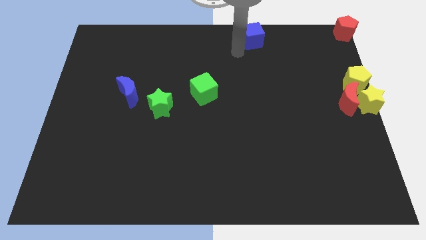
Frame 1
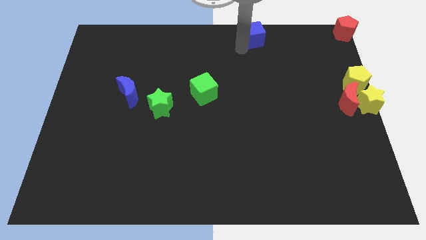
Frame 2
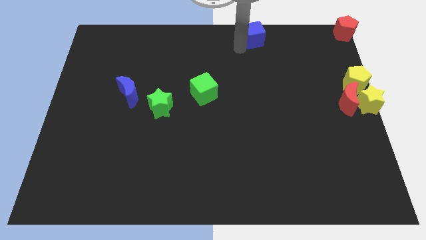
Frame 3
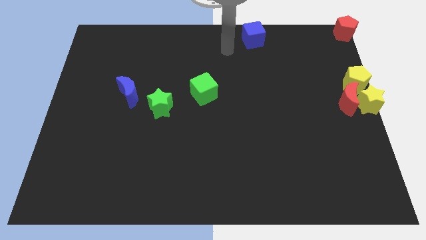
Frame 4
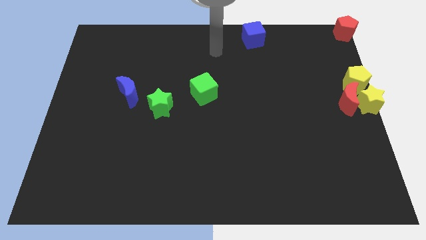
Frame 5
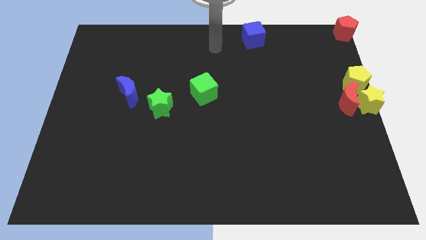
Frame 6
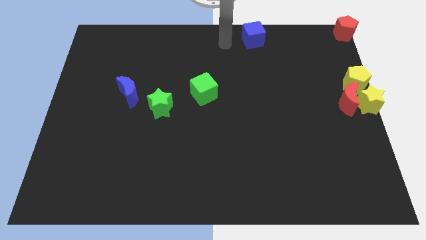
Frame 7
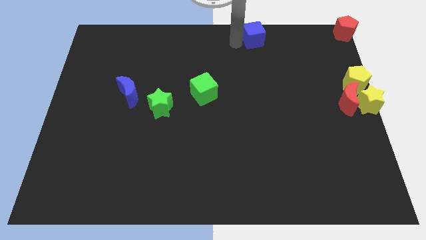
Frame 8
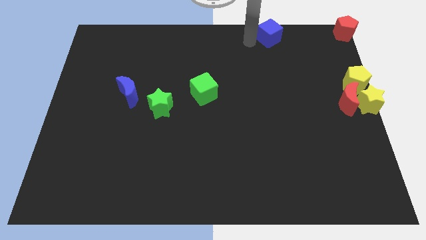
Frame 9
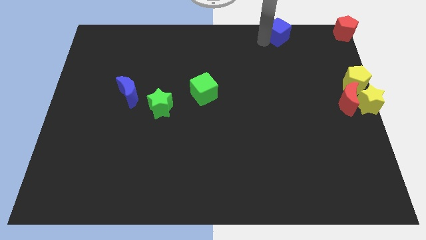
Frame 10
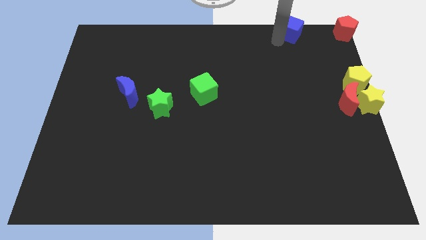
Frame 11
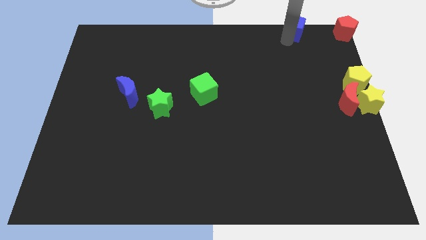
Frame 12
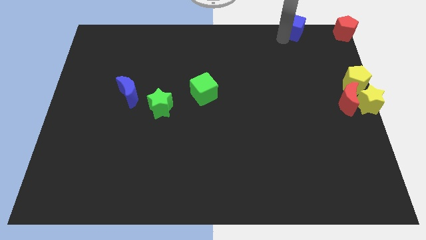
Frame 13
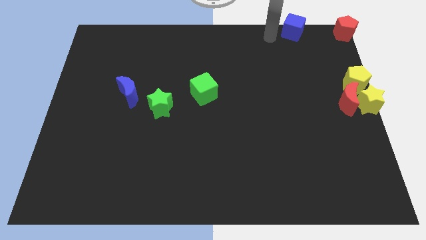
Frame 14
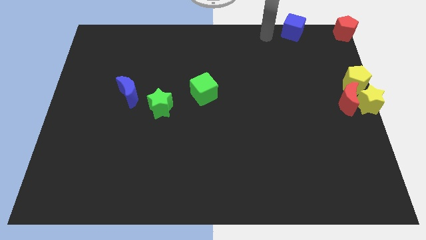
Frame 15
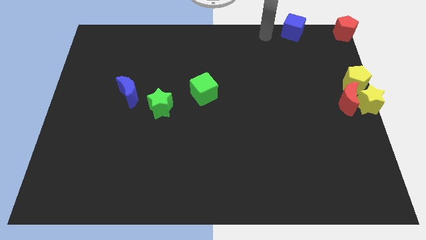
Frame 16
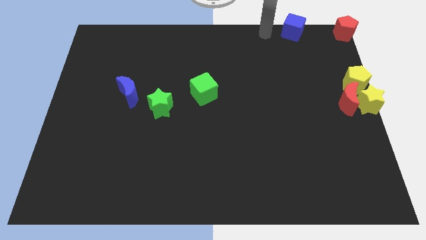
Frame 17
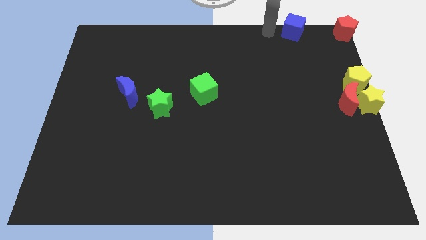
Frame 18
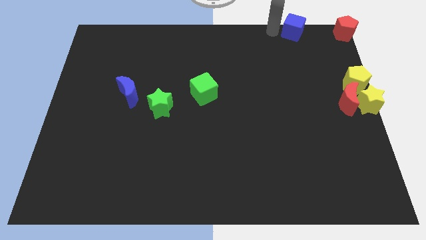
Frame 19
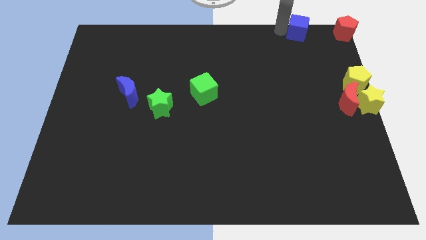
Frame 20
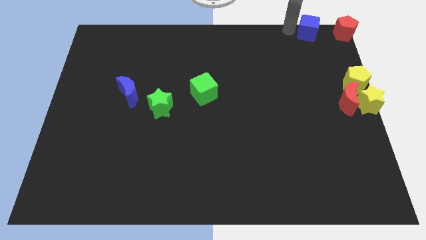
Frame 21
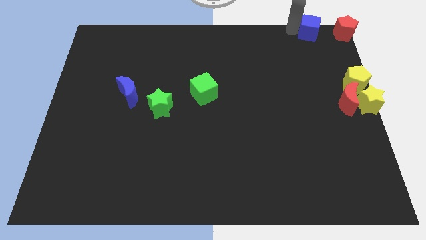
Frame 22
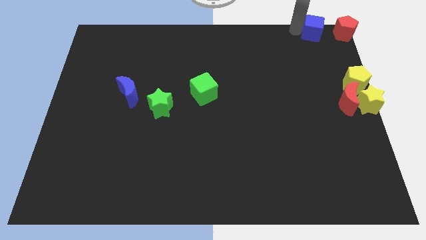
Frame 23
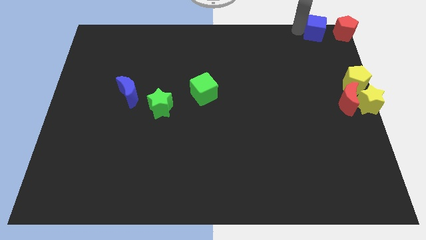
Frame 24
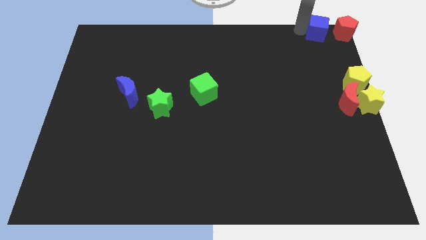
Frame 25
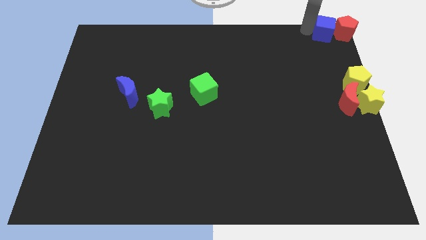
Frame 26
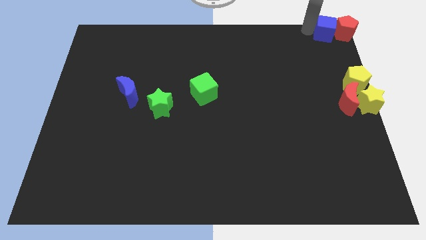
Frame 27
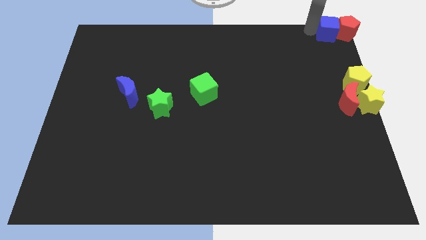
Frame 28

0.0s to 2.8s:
push the blue cube towards the top right corner of the board

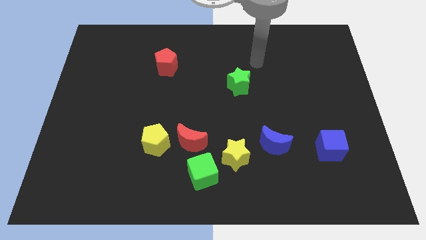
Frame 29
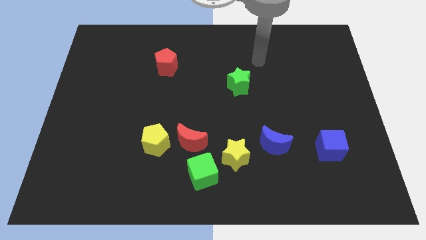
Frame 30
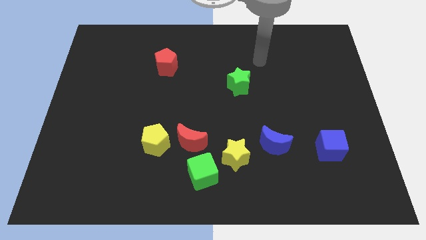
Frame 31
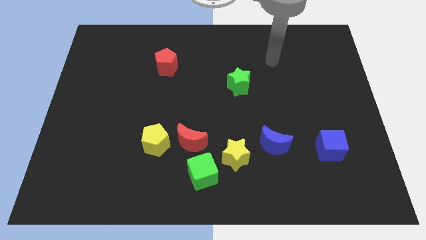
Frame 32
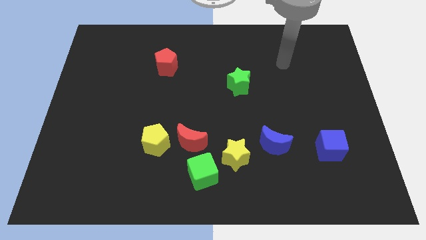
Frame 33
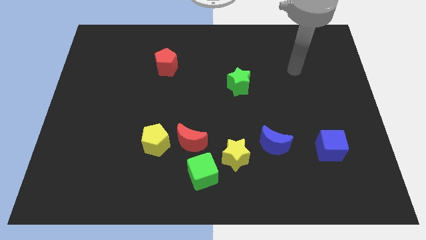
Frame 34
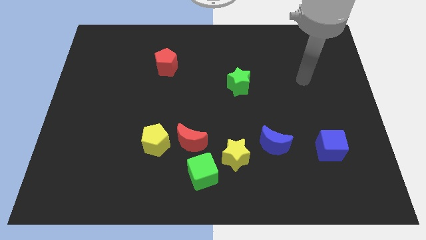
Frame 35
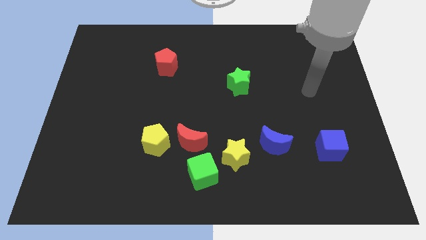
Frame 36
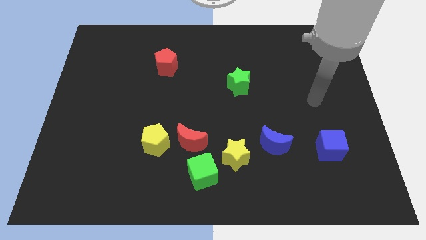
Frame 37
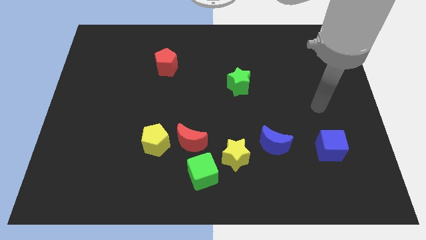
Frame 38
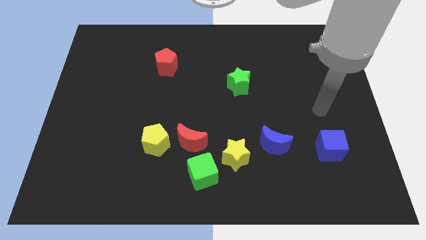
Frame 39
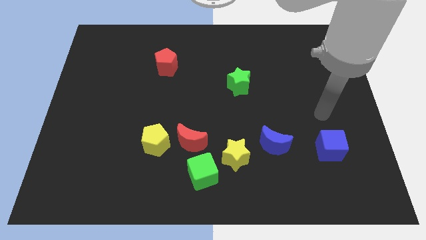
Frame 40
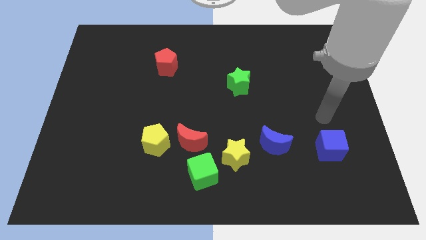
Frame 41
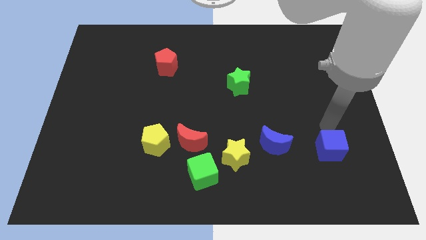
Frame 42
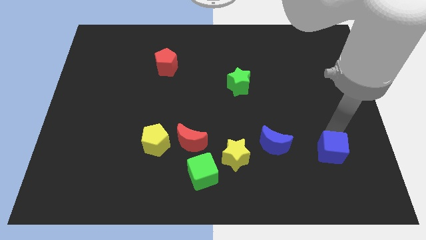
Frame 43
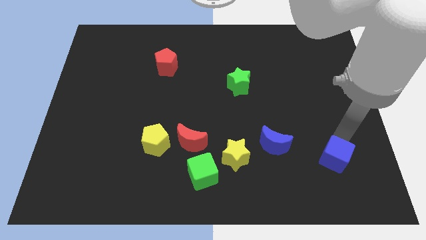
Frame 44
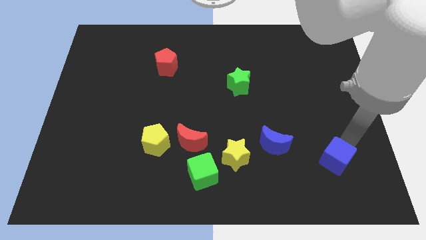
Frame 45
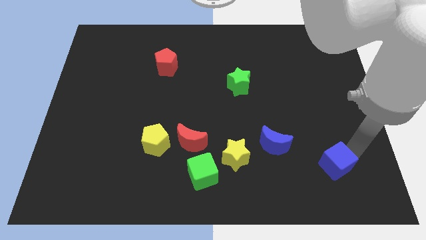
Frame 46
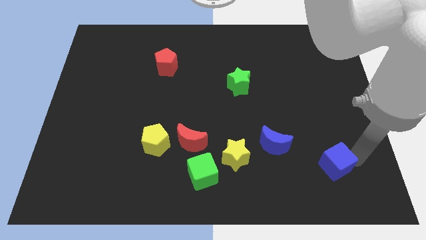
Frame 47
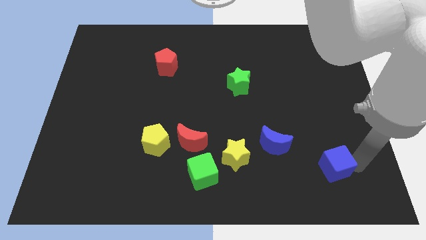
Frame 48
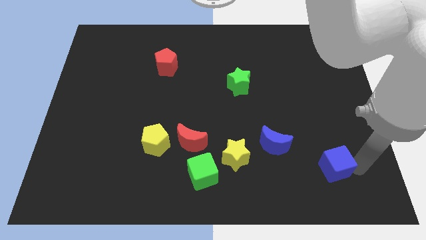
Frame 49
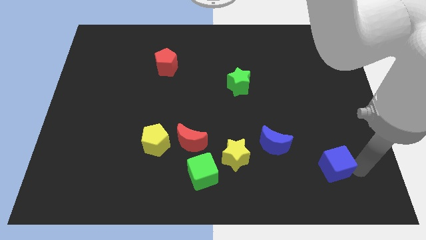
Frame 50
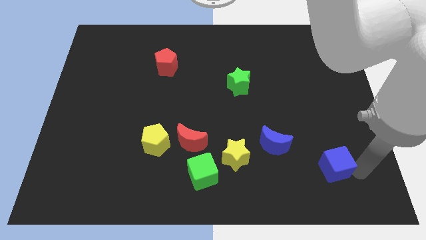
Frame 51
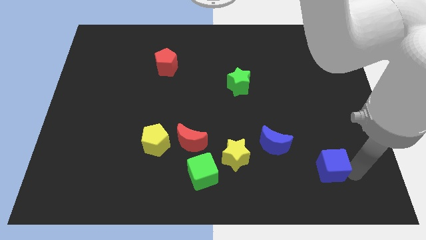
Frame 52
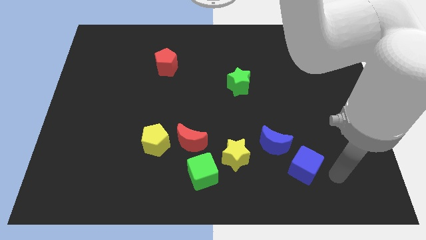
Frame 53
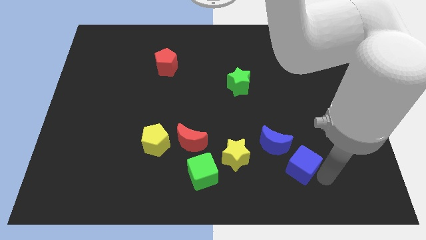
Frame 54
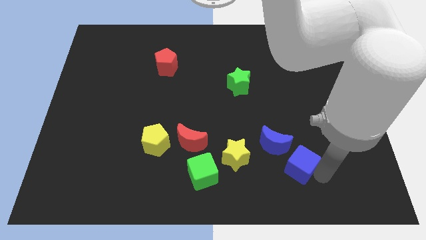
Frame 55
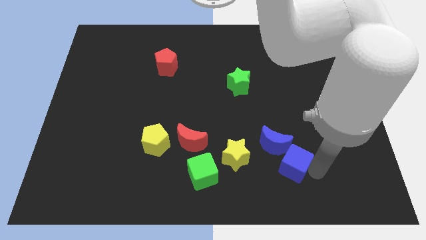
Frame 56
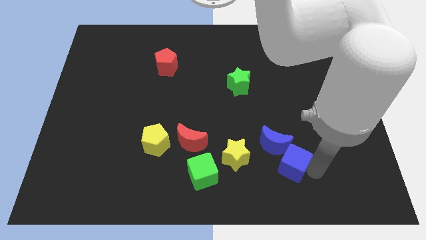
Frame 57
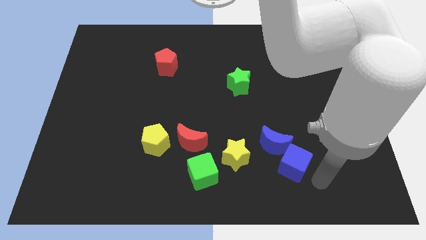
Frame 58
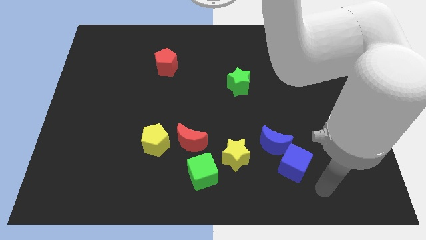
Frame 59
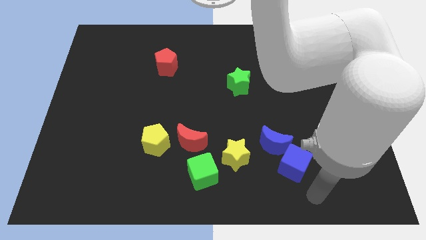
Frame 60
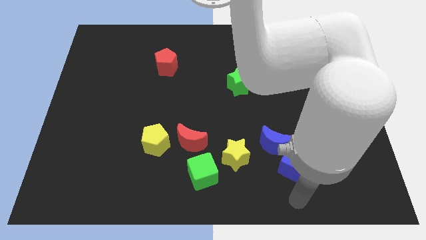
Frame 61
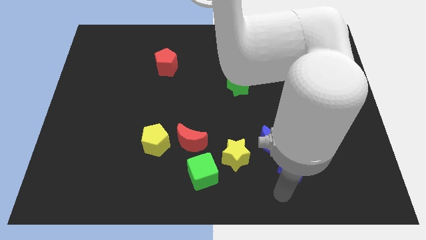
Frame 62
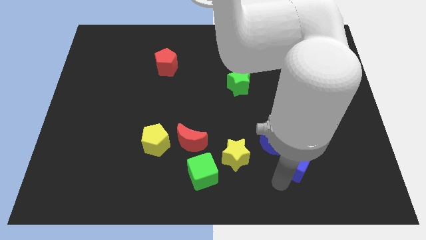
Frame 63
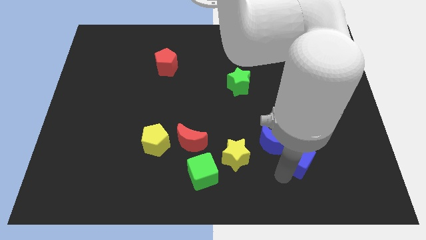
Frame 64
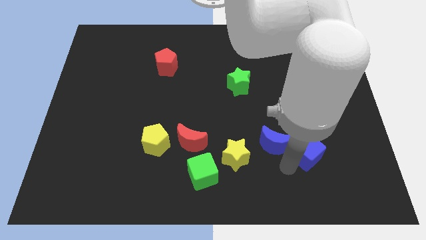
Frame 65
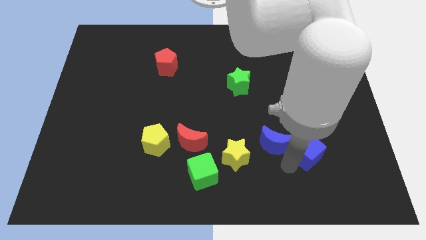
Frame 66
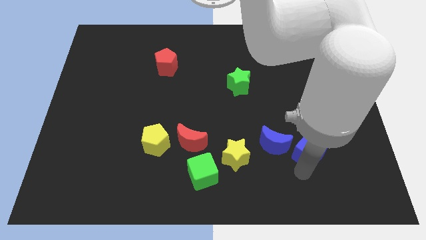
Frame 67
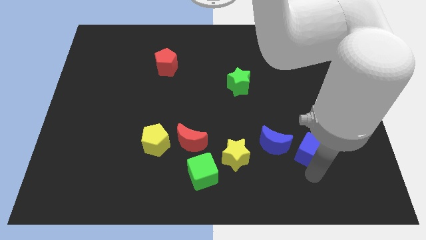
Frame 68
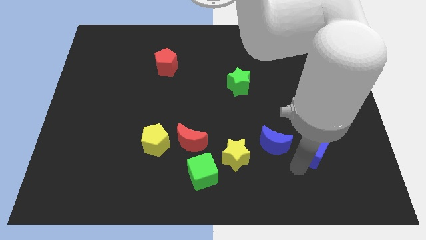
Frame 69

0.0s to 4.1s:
push the blue cube close to the blue moon

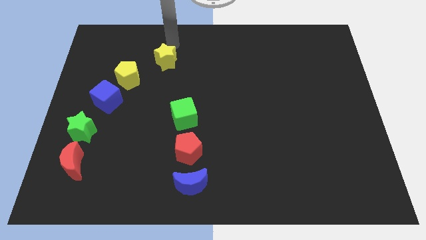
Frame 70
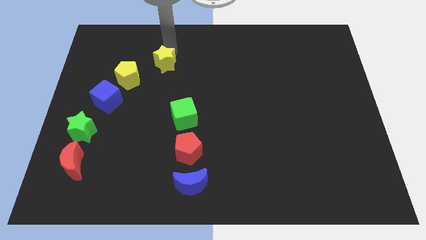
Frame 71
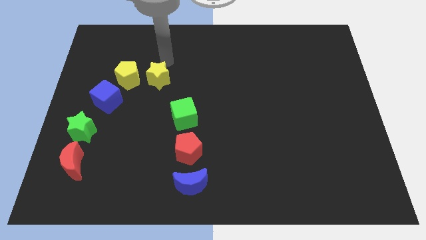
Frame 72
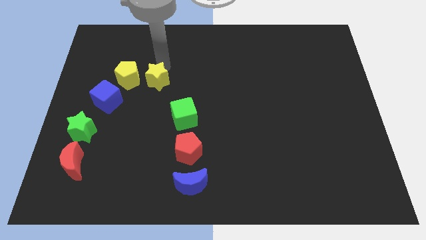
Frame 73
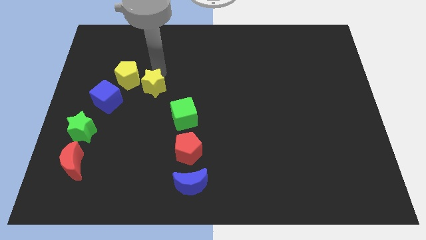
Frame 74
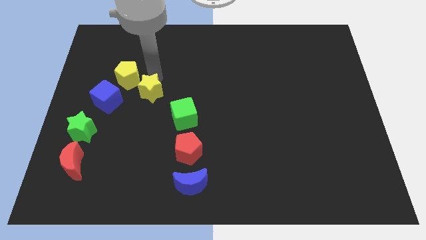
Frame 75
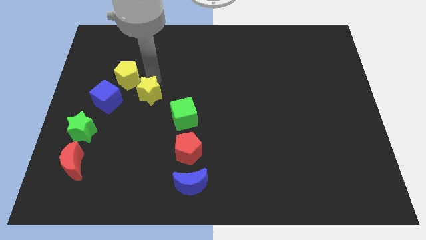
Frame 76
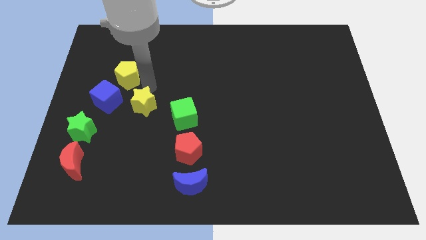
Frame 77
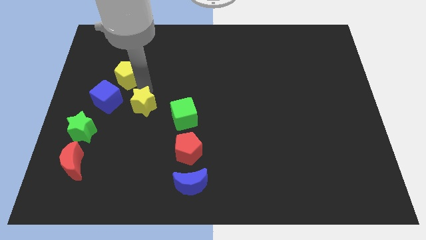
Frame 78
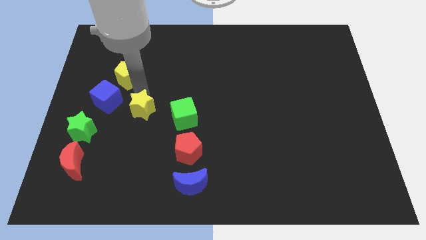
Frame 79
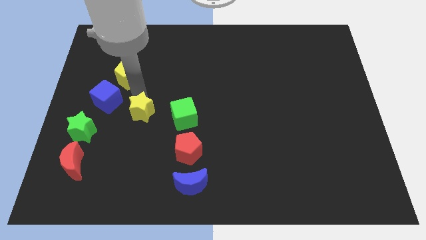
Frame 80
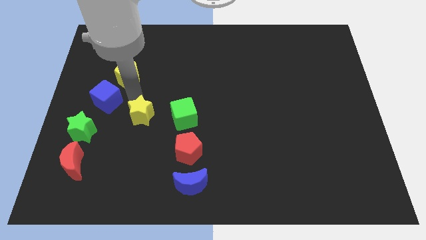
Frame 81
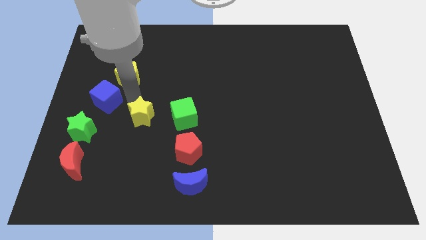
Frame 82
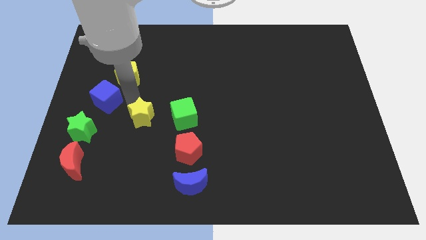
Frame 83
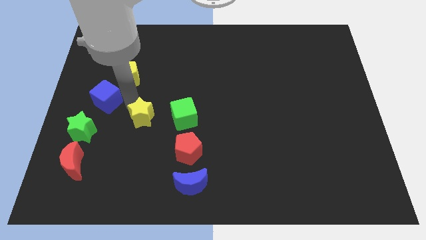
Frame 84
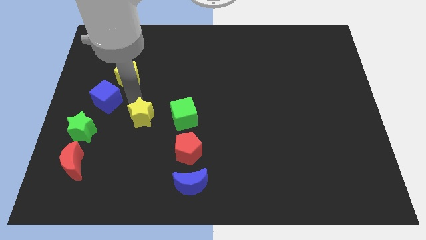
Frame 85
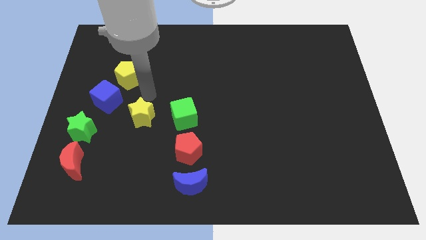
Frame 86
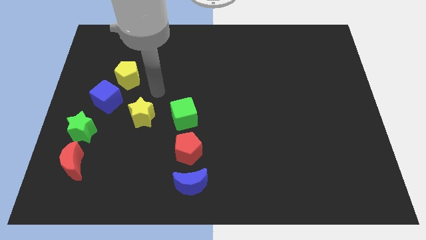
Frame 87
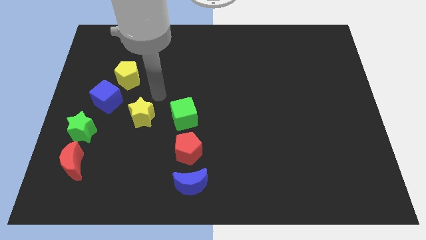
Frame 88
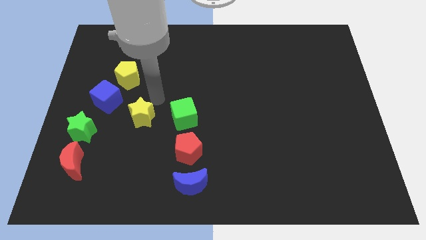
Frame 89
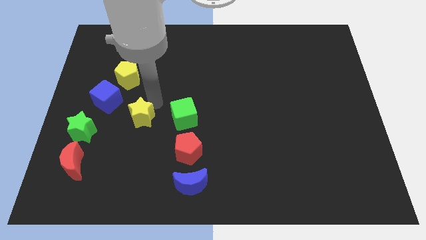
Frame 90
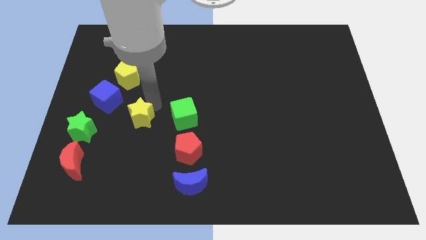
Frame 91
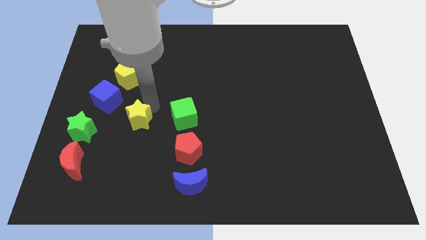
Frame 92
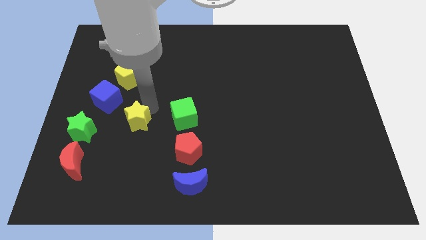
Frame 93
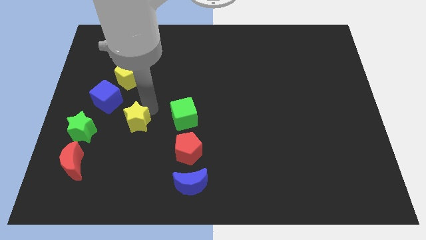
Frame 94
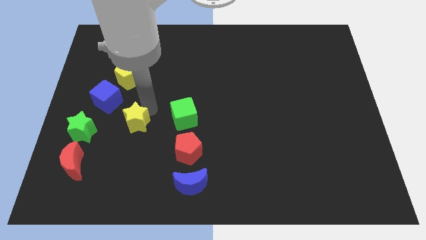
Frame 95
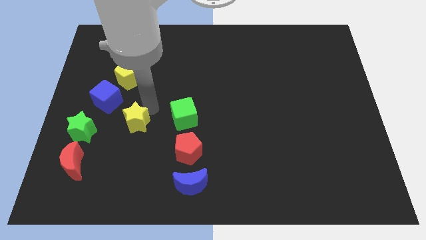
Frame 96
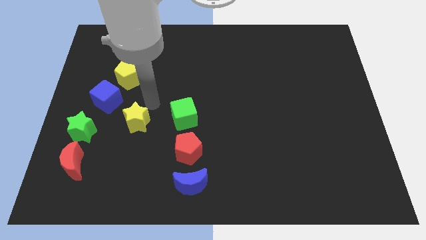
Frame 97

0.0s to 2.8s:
push the yellow star towards the bottom side of the board
